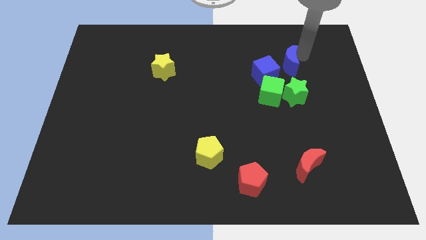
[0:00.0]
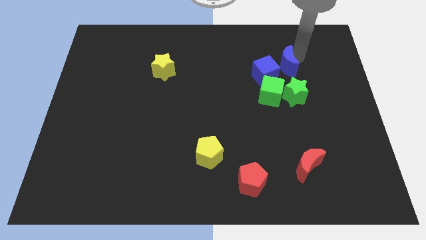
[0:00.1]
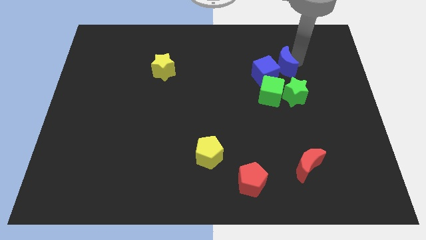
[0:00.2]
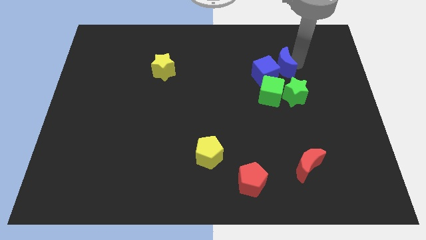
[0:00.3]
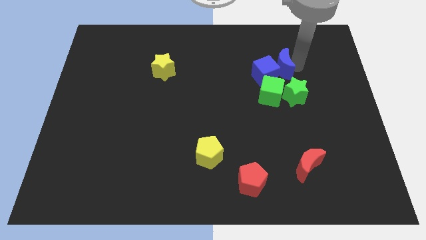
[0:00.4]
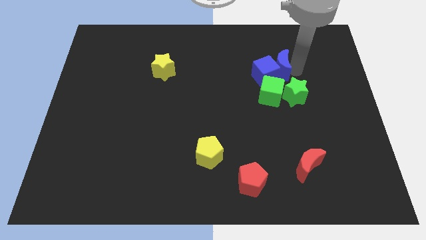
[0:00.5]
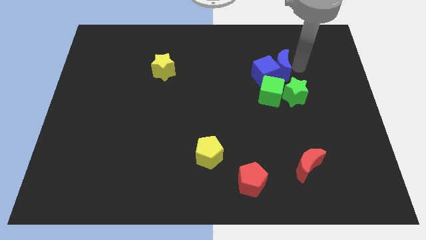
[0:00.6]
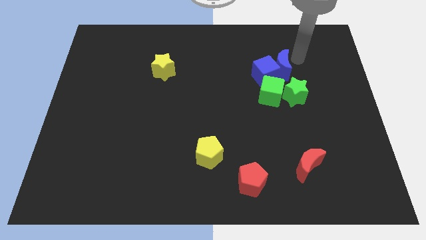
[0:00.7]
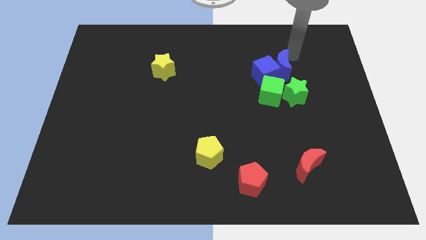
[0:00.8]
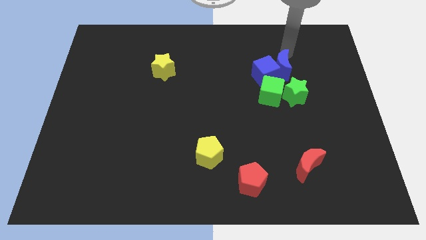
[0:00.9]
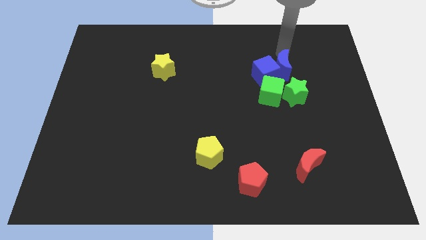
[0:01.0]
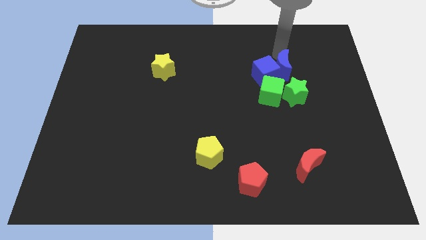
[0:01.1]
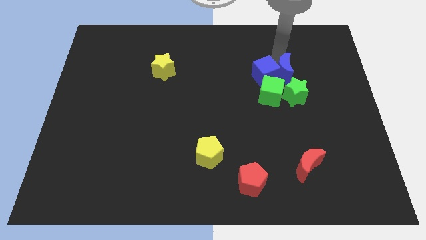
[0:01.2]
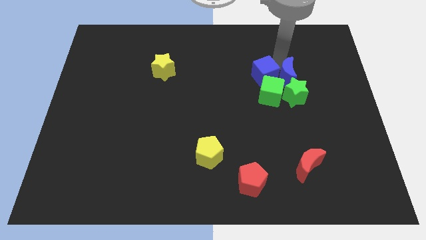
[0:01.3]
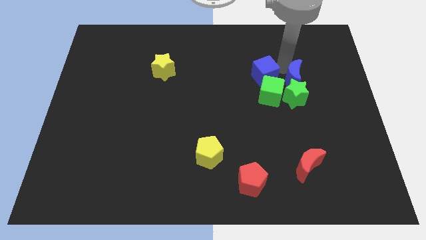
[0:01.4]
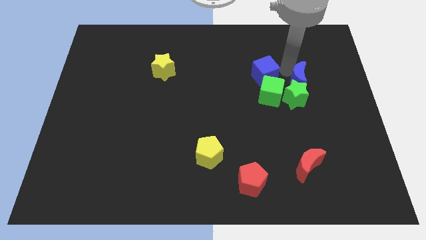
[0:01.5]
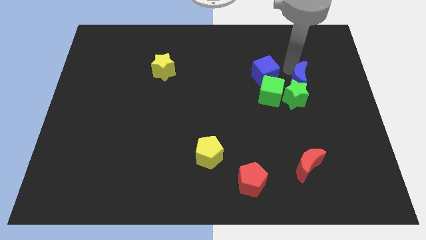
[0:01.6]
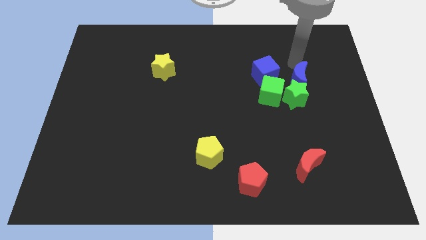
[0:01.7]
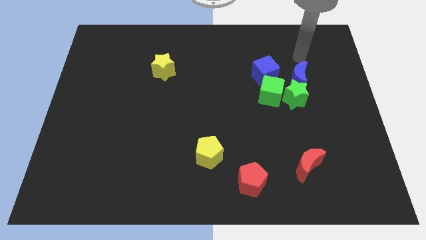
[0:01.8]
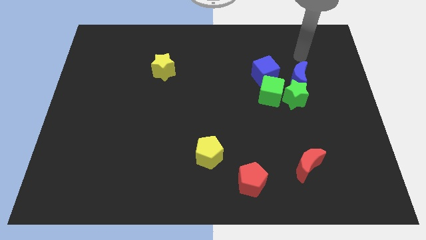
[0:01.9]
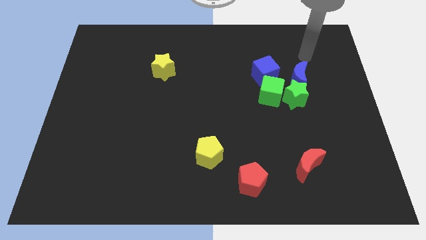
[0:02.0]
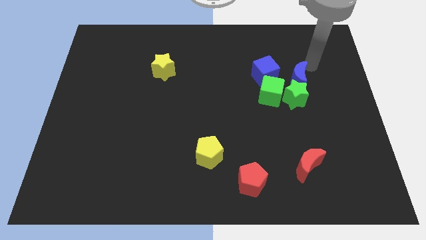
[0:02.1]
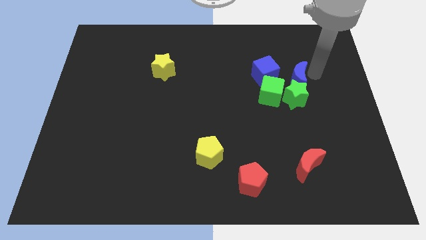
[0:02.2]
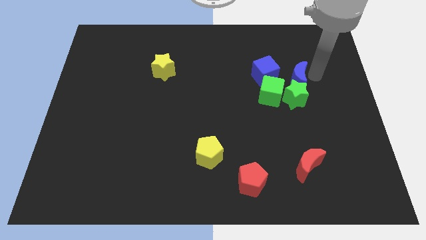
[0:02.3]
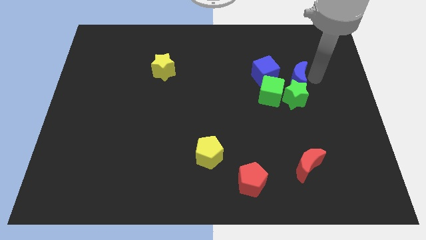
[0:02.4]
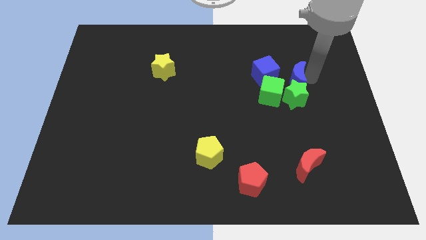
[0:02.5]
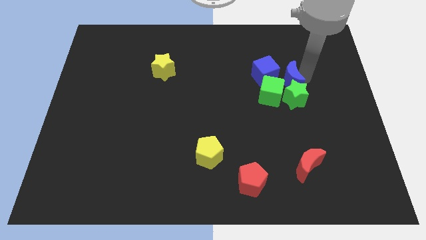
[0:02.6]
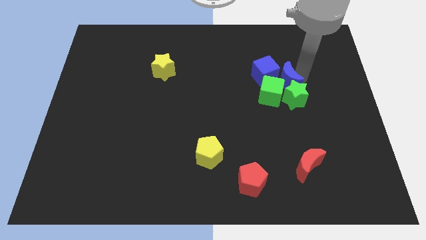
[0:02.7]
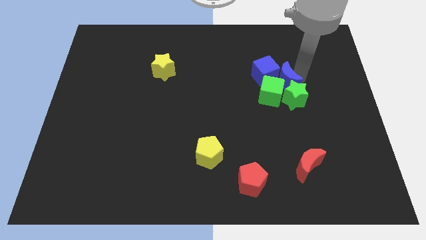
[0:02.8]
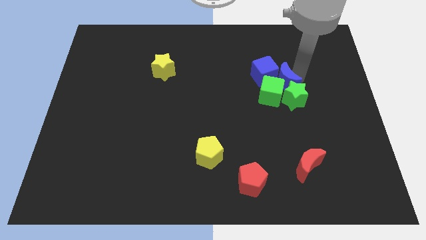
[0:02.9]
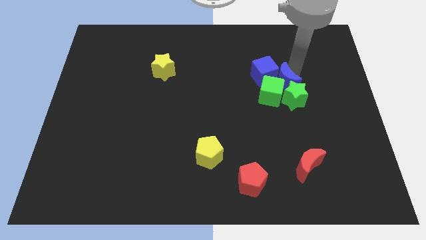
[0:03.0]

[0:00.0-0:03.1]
push blue moon above green star

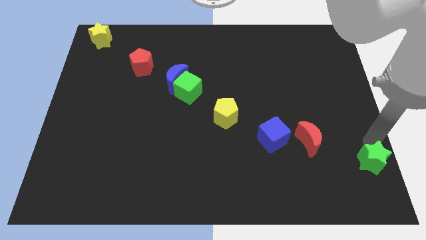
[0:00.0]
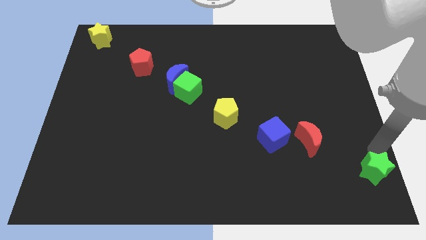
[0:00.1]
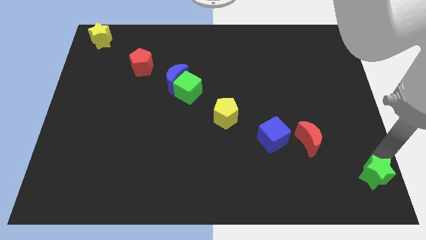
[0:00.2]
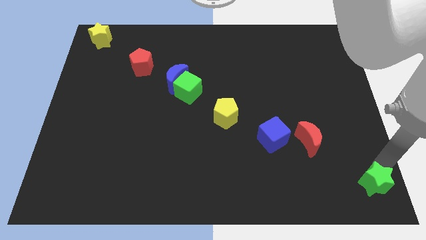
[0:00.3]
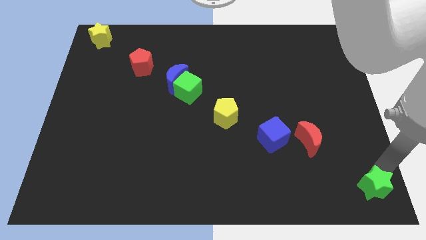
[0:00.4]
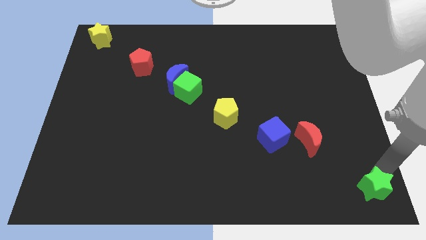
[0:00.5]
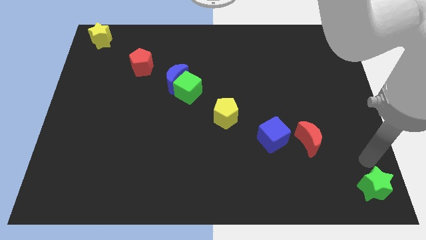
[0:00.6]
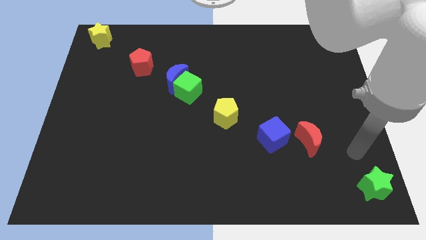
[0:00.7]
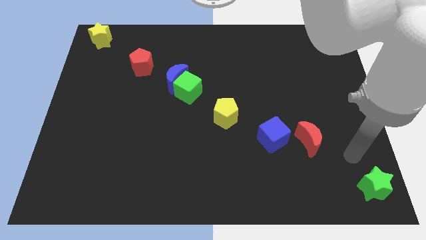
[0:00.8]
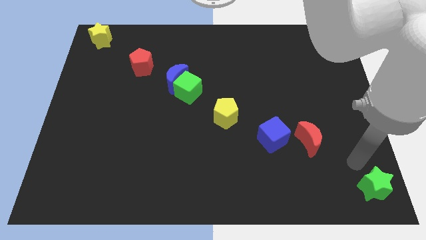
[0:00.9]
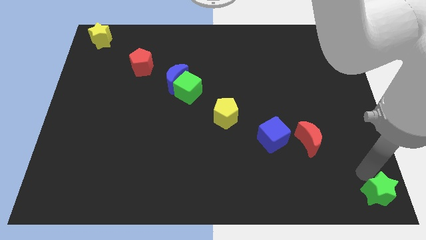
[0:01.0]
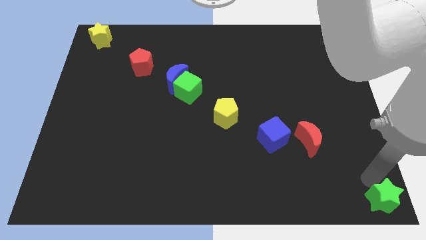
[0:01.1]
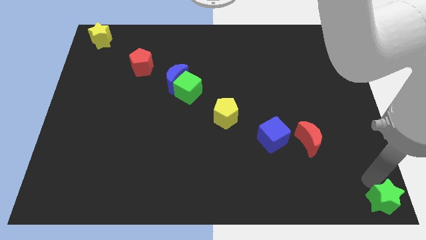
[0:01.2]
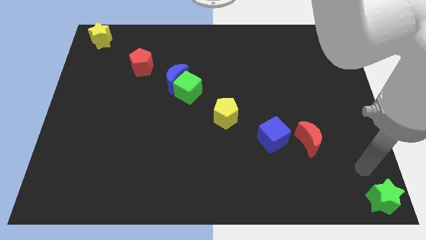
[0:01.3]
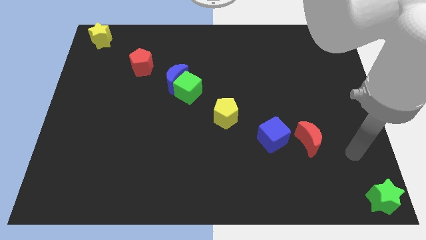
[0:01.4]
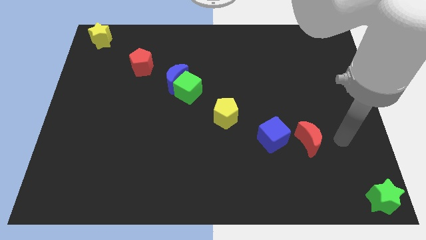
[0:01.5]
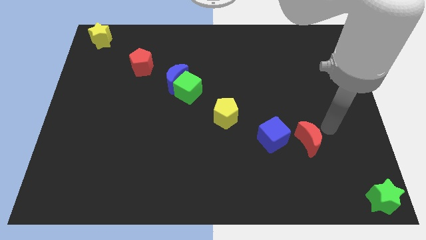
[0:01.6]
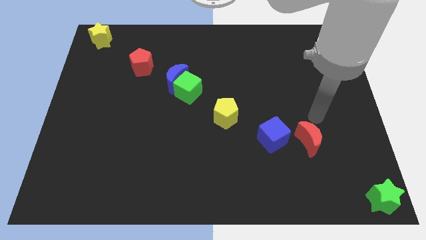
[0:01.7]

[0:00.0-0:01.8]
move the green star to the bottom right

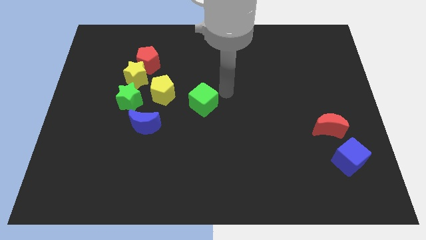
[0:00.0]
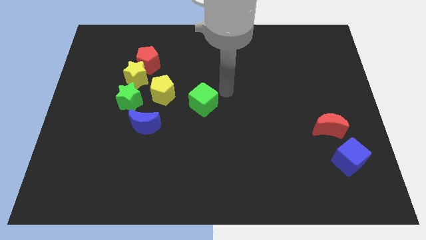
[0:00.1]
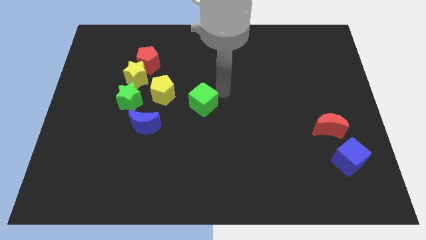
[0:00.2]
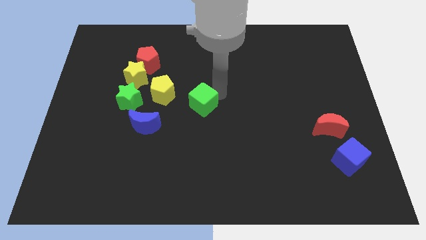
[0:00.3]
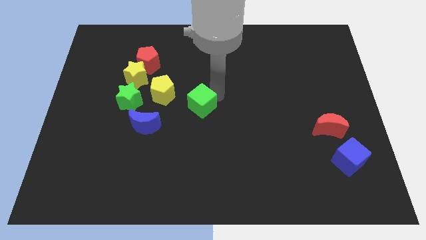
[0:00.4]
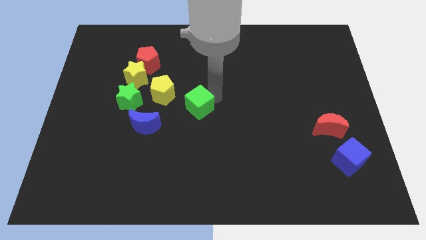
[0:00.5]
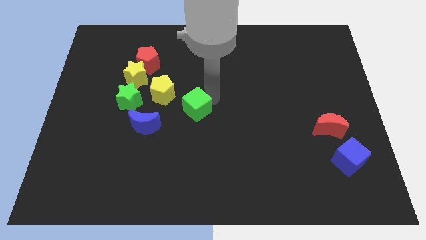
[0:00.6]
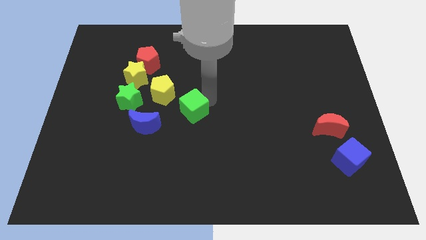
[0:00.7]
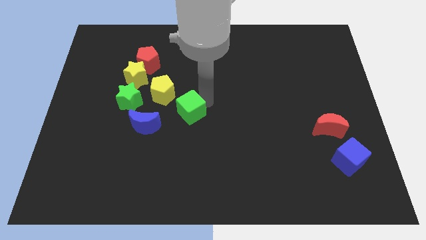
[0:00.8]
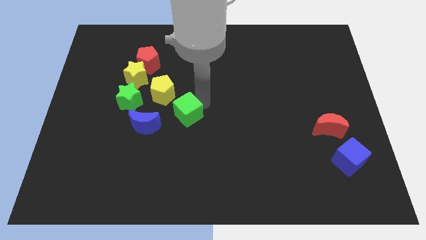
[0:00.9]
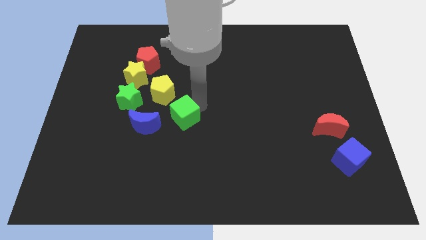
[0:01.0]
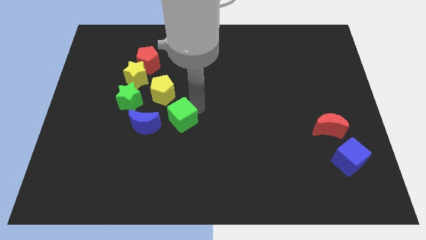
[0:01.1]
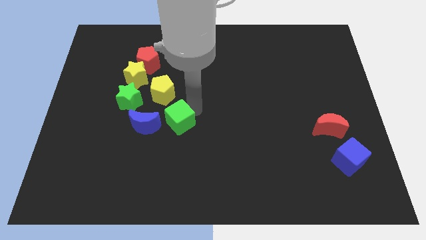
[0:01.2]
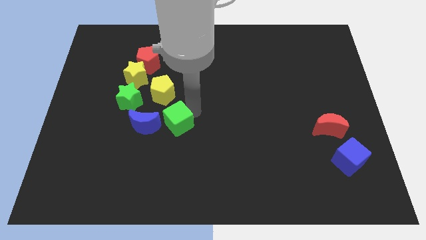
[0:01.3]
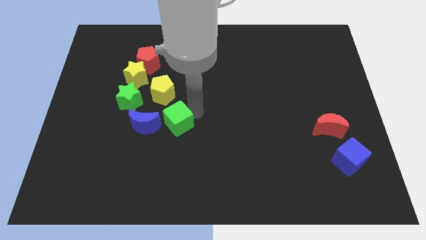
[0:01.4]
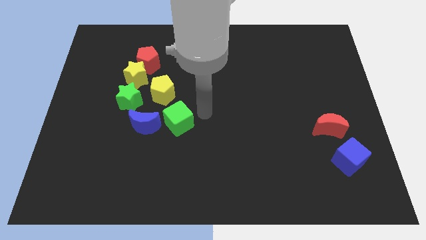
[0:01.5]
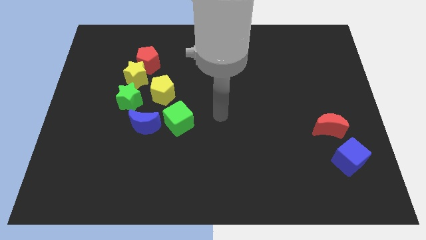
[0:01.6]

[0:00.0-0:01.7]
drag the green cube to the right side of the blue moon

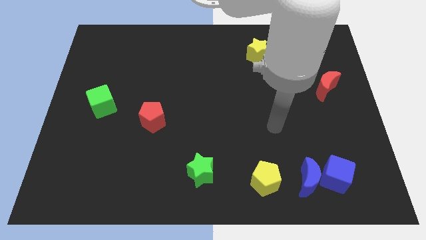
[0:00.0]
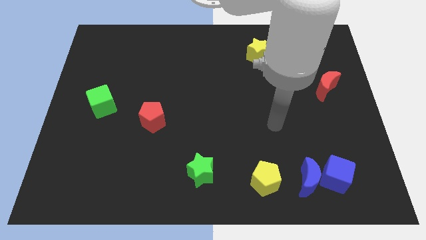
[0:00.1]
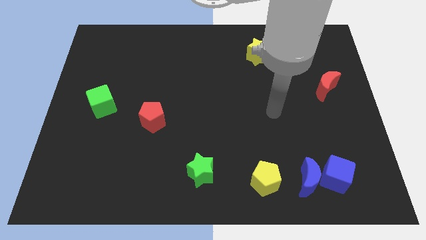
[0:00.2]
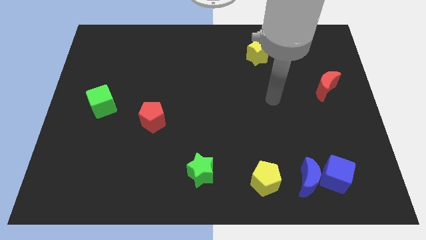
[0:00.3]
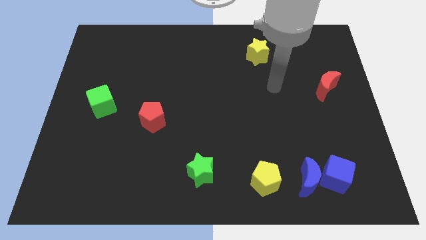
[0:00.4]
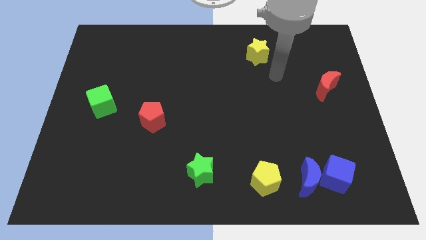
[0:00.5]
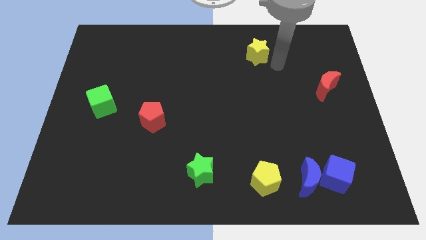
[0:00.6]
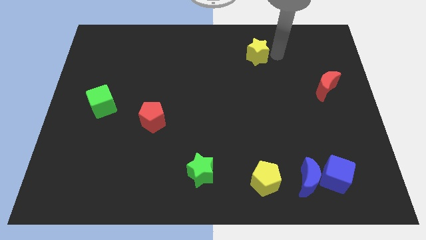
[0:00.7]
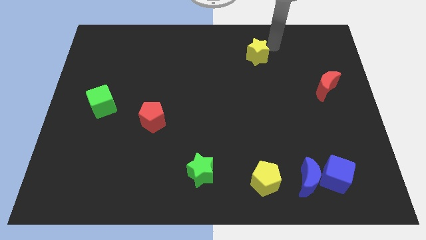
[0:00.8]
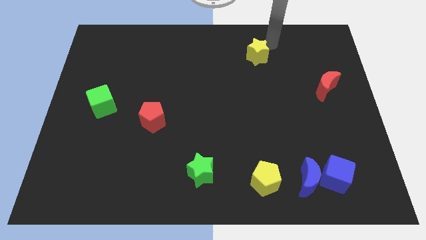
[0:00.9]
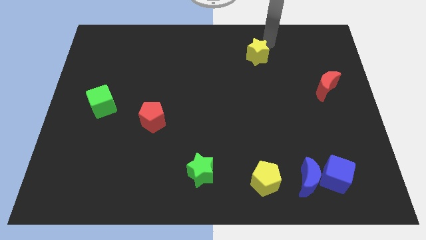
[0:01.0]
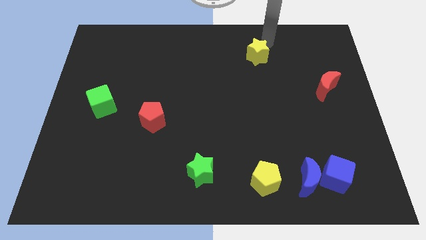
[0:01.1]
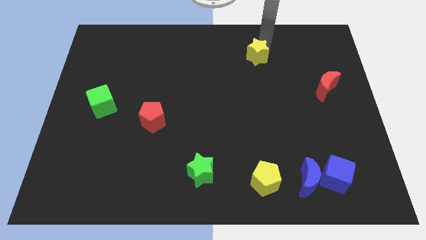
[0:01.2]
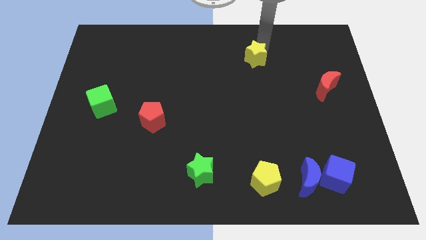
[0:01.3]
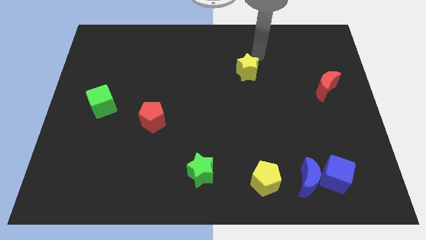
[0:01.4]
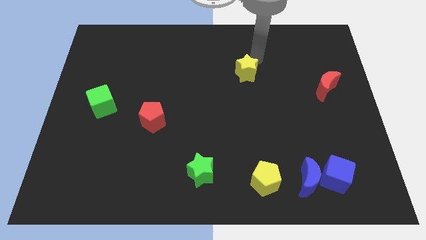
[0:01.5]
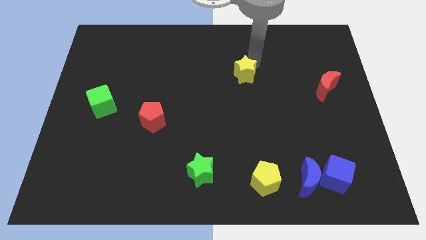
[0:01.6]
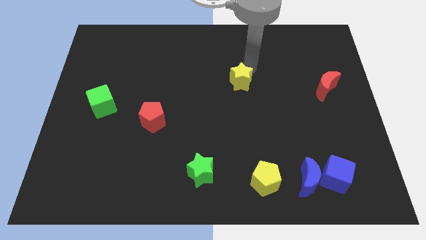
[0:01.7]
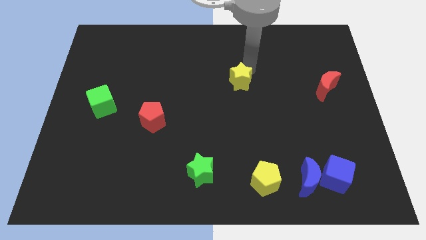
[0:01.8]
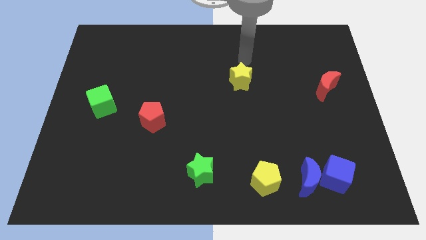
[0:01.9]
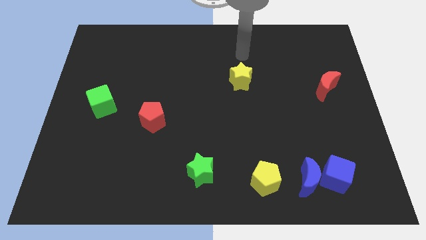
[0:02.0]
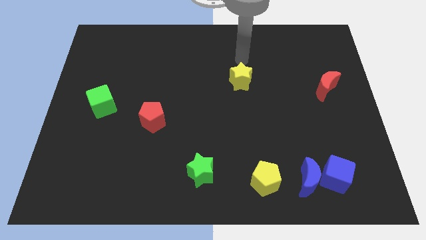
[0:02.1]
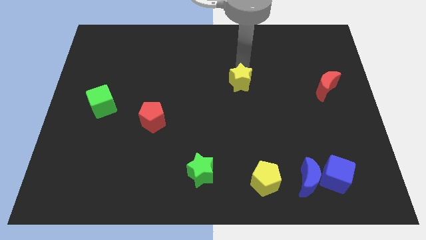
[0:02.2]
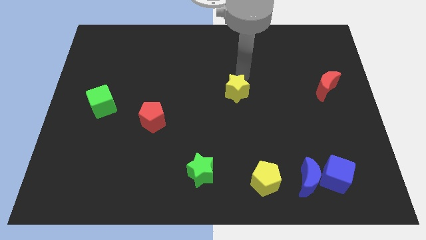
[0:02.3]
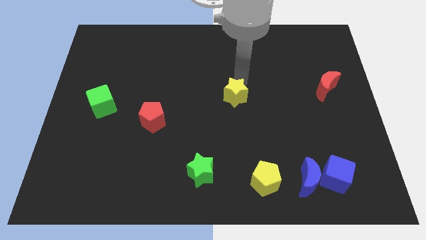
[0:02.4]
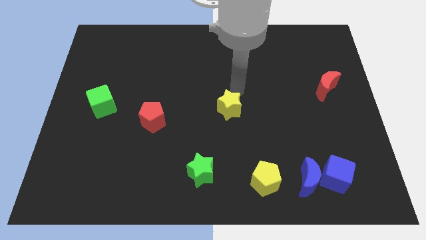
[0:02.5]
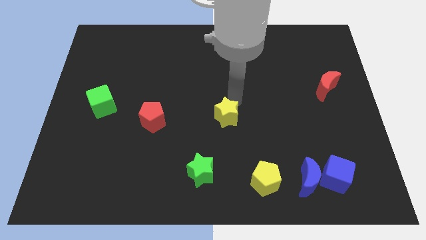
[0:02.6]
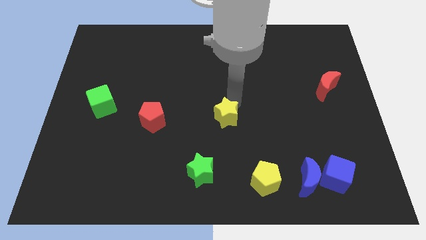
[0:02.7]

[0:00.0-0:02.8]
move the yellow star at center of the board
